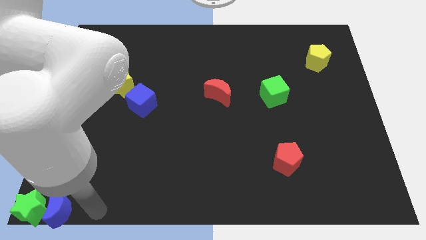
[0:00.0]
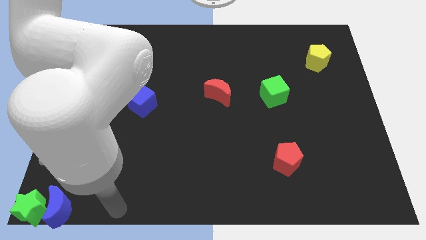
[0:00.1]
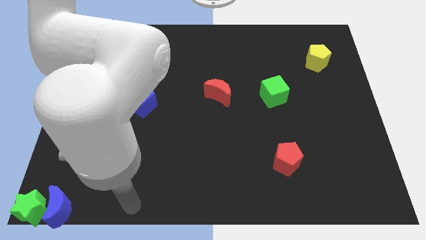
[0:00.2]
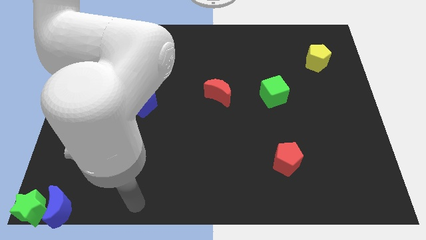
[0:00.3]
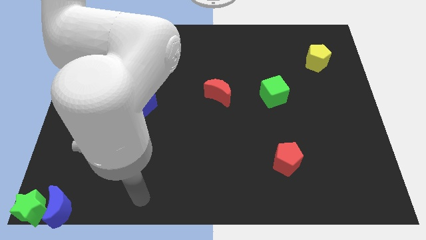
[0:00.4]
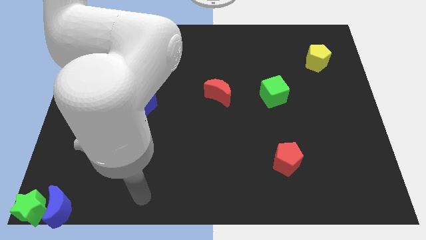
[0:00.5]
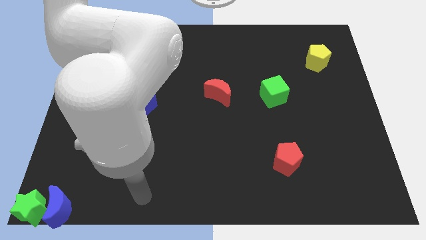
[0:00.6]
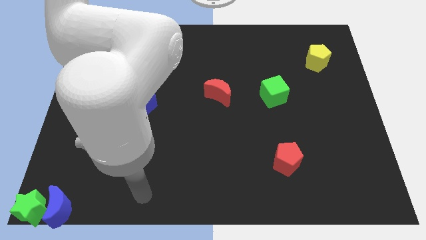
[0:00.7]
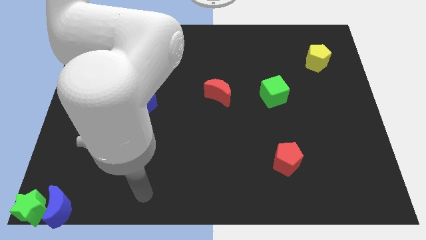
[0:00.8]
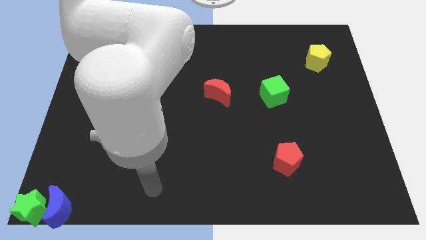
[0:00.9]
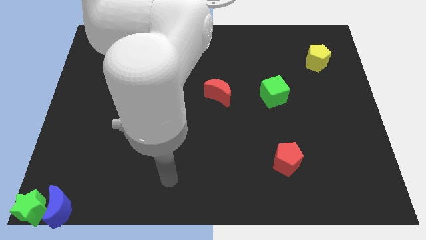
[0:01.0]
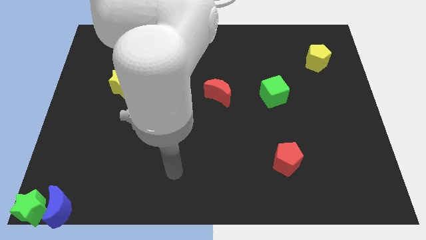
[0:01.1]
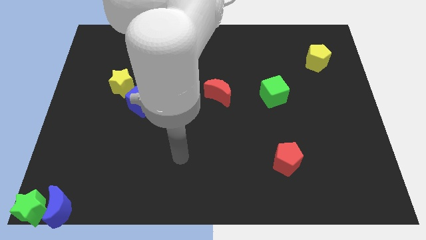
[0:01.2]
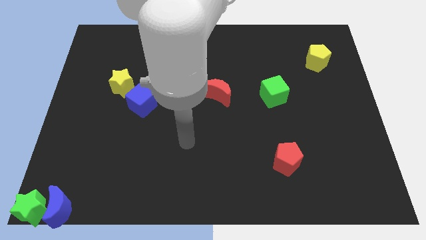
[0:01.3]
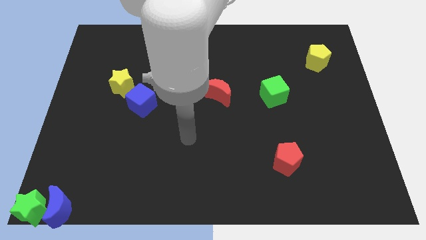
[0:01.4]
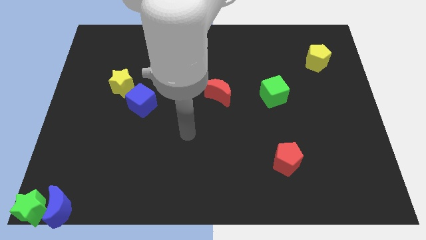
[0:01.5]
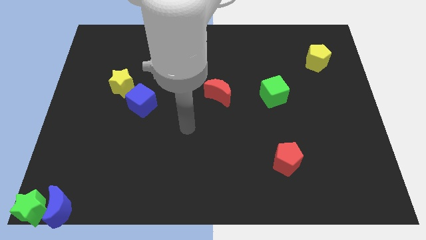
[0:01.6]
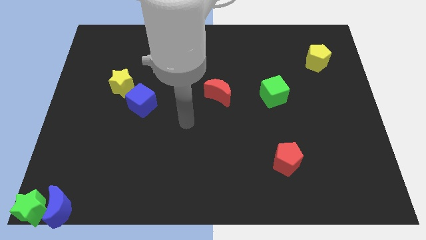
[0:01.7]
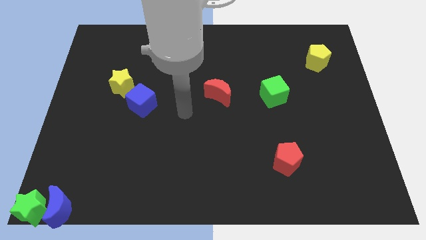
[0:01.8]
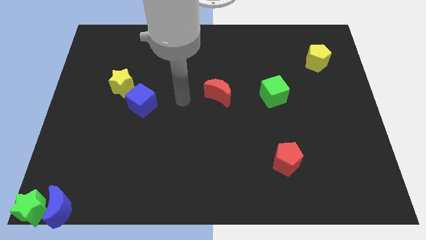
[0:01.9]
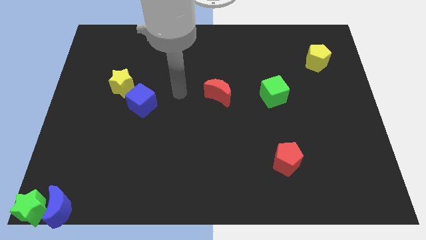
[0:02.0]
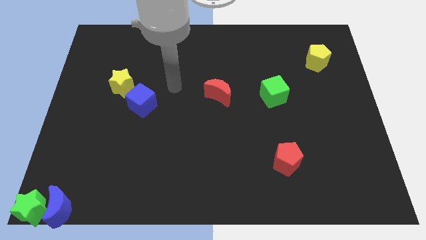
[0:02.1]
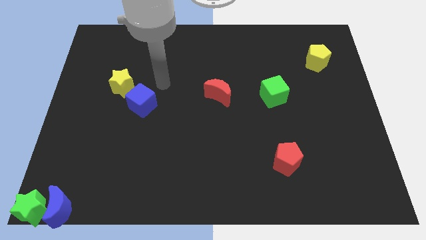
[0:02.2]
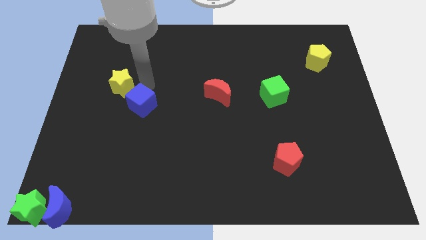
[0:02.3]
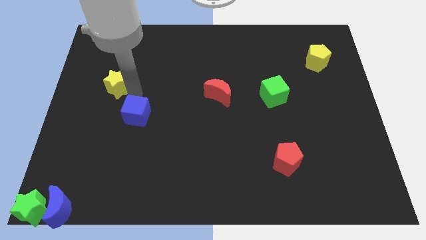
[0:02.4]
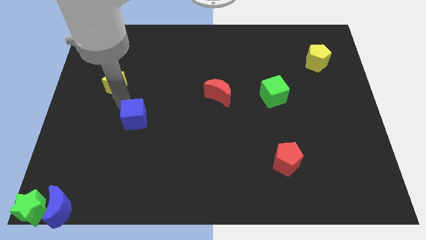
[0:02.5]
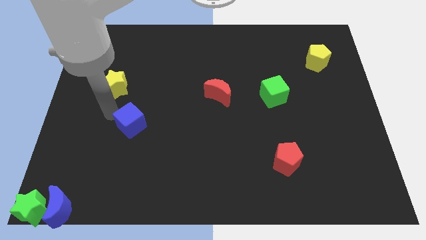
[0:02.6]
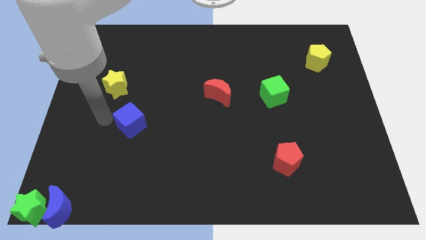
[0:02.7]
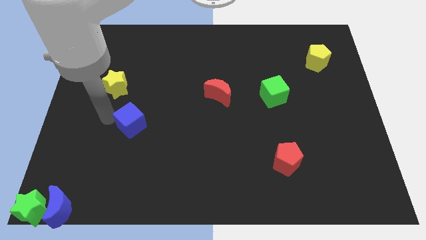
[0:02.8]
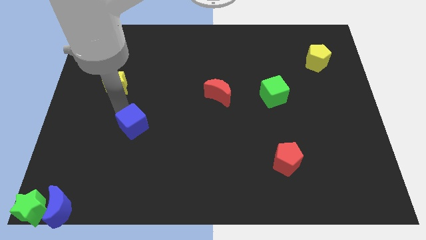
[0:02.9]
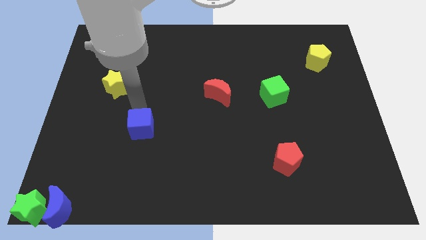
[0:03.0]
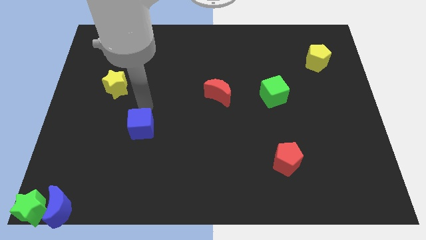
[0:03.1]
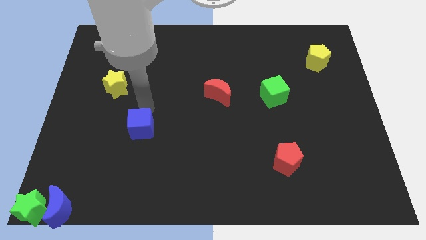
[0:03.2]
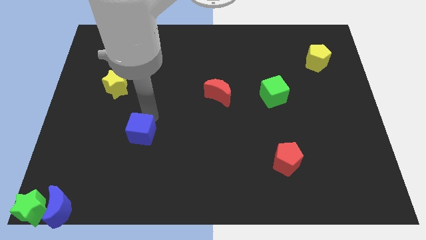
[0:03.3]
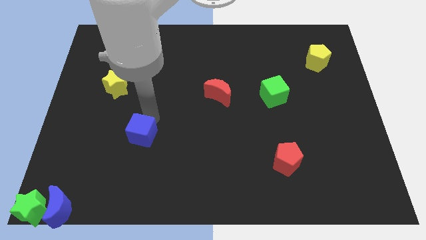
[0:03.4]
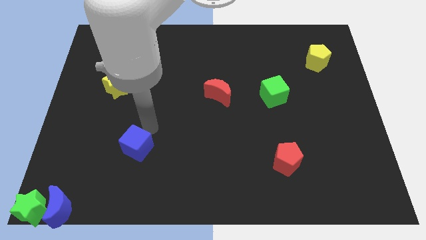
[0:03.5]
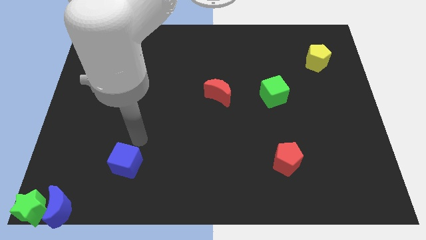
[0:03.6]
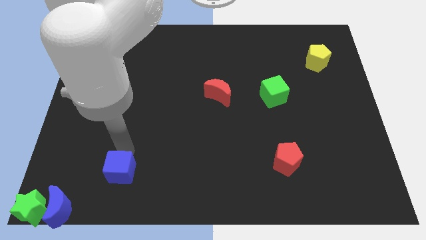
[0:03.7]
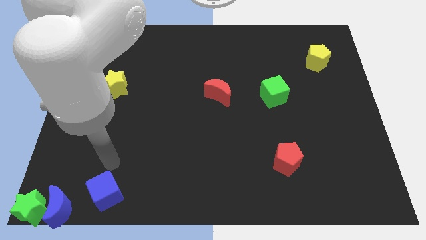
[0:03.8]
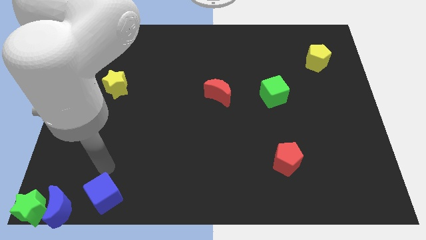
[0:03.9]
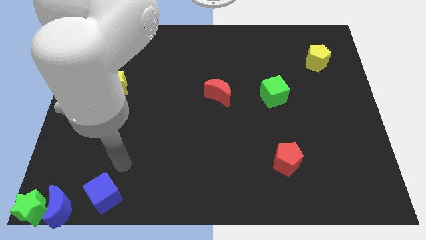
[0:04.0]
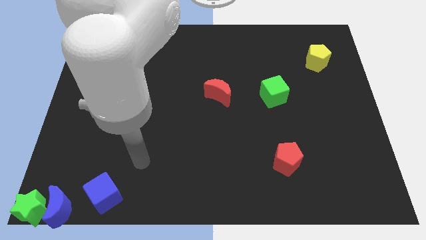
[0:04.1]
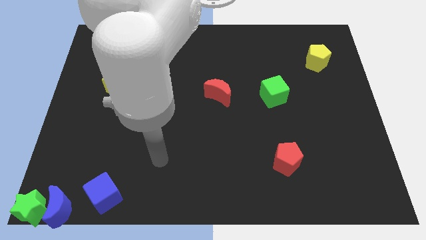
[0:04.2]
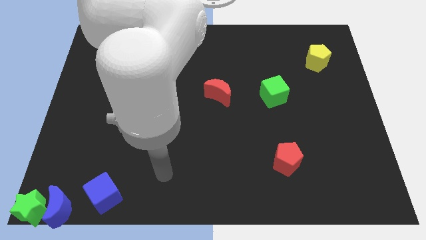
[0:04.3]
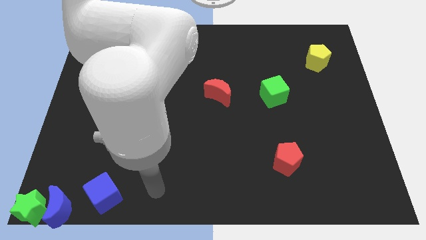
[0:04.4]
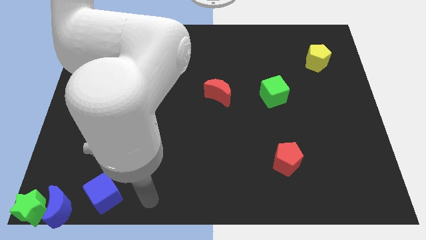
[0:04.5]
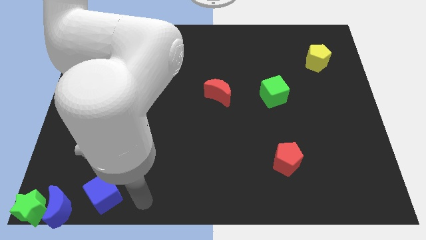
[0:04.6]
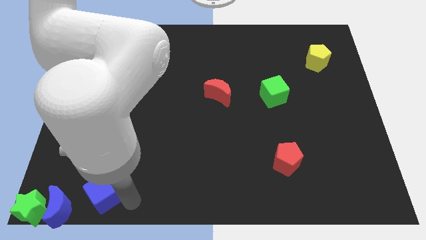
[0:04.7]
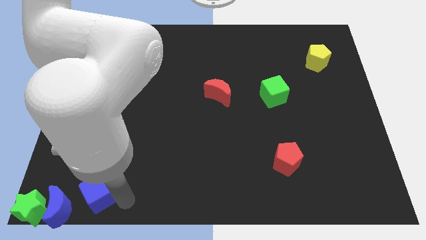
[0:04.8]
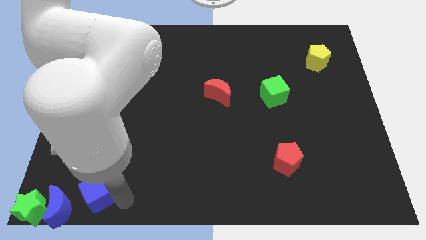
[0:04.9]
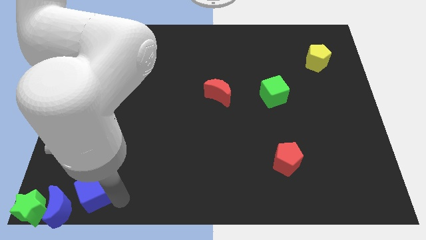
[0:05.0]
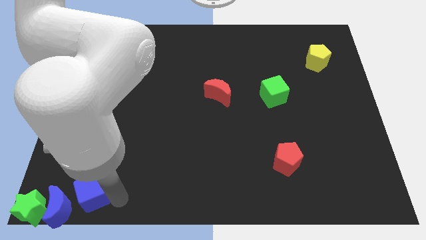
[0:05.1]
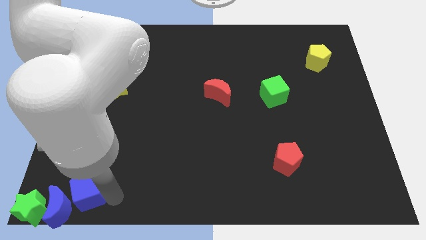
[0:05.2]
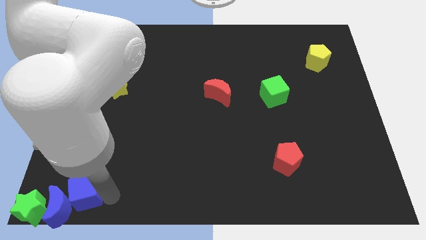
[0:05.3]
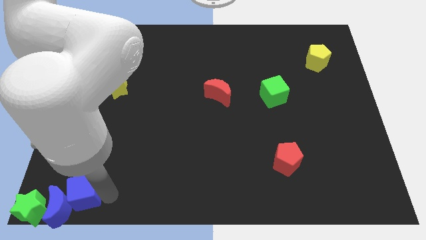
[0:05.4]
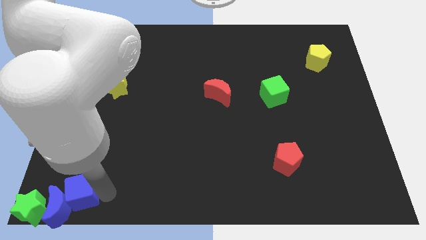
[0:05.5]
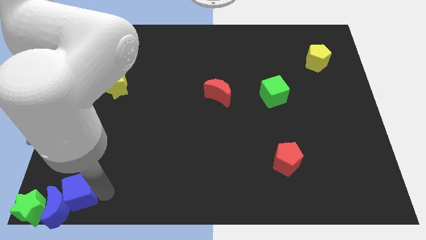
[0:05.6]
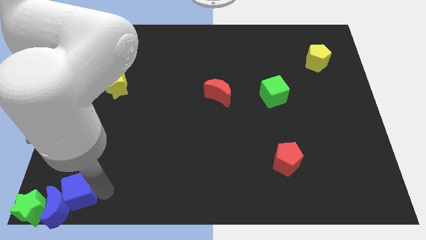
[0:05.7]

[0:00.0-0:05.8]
drag the blue cube into the right side of the blue moon

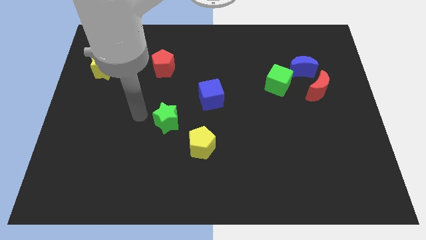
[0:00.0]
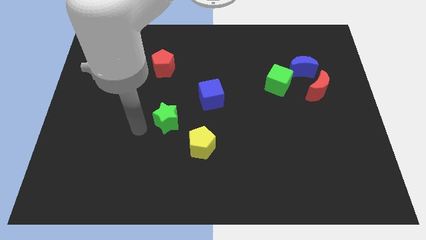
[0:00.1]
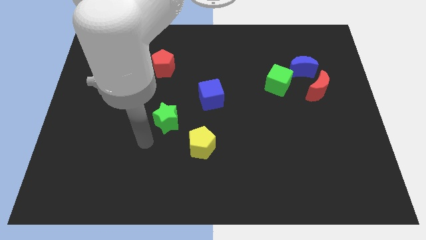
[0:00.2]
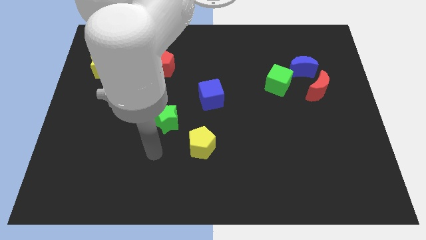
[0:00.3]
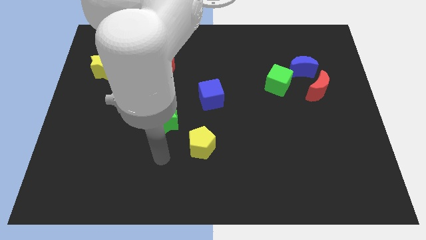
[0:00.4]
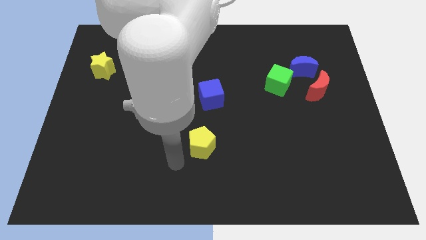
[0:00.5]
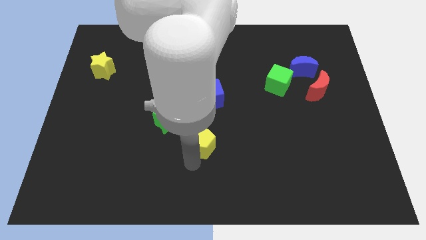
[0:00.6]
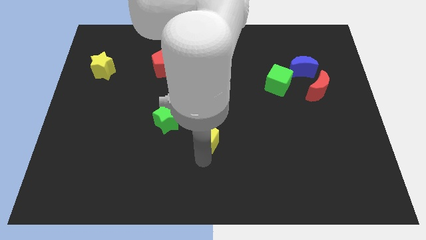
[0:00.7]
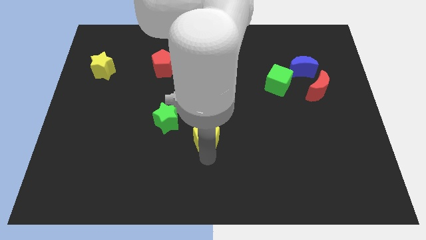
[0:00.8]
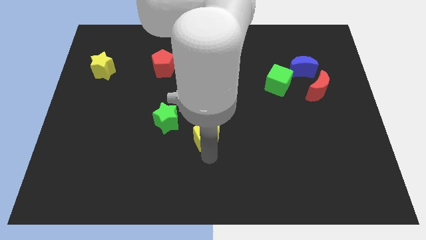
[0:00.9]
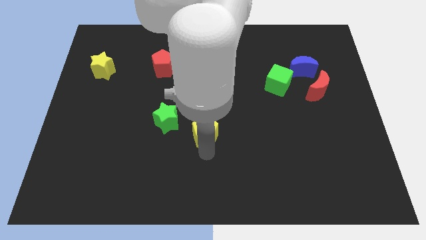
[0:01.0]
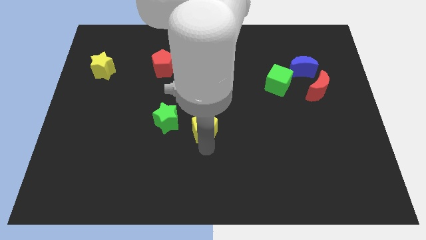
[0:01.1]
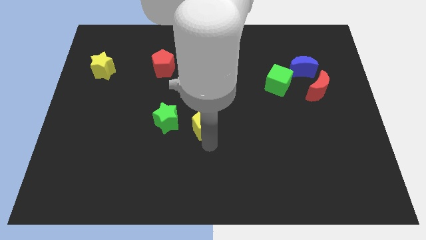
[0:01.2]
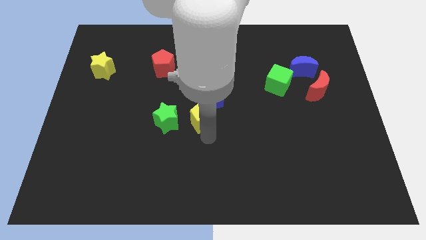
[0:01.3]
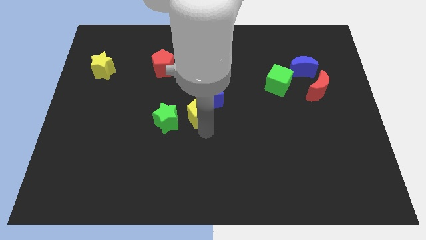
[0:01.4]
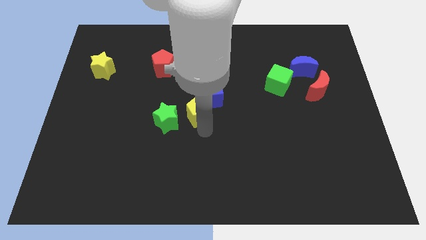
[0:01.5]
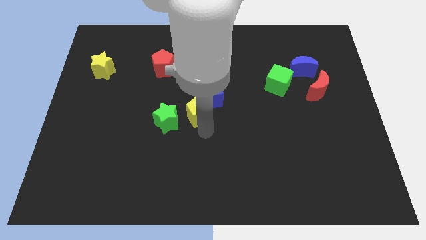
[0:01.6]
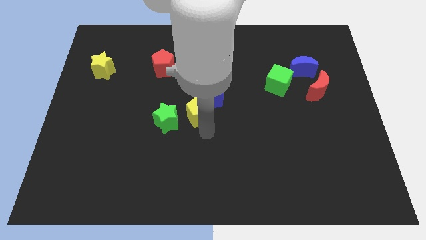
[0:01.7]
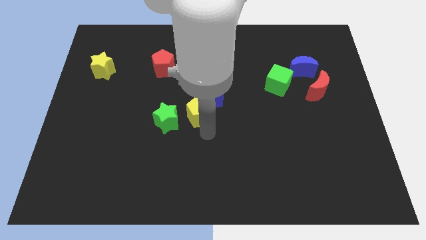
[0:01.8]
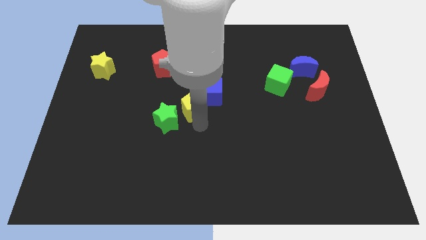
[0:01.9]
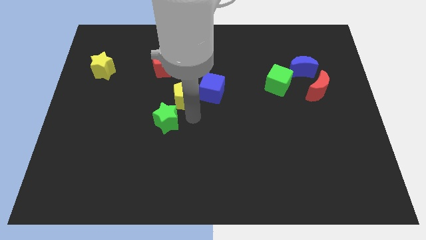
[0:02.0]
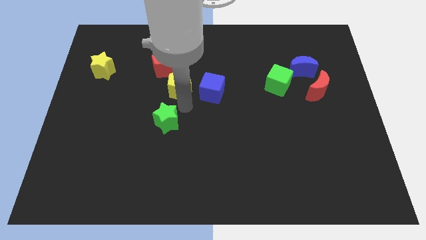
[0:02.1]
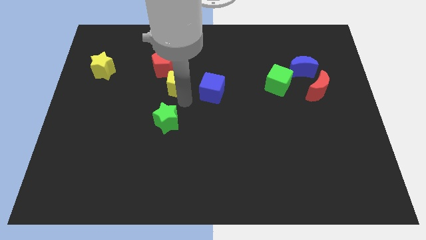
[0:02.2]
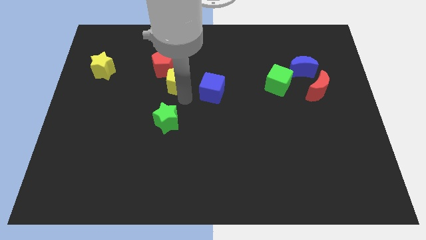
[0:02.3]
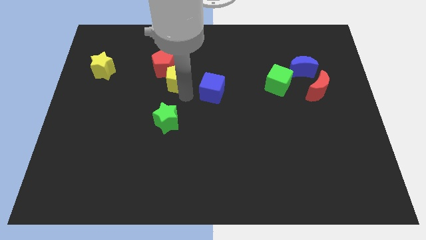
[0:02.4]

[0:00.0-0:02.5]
place the yellow pentagon into the red pentagon

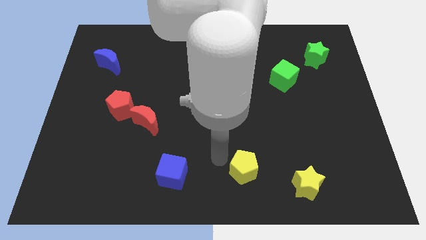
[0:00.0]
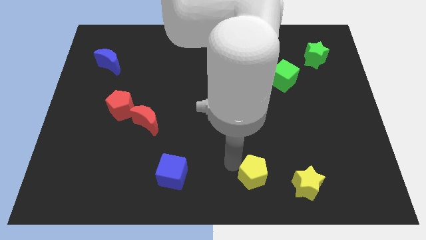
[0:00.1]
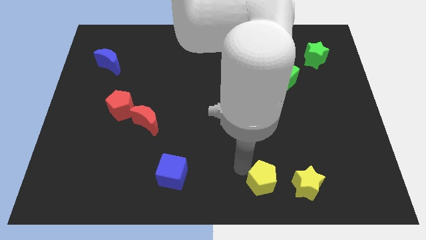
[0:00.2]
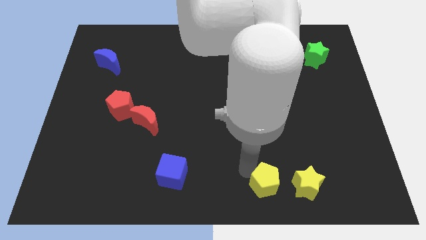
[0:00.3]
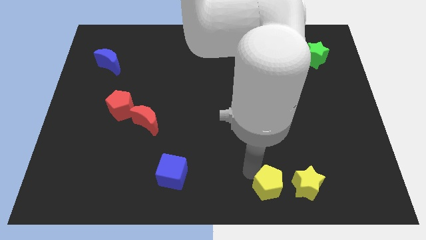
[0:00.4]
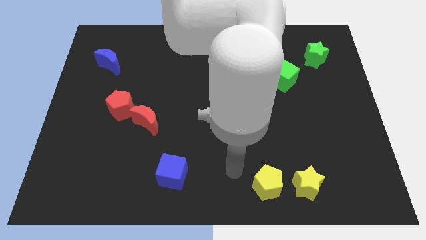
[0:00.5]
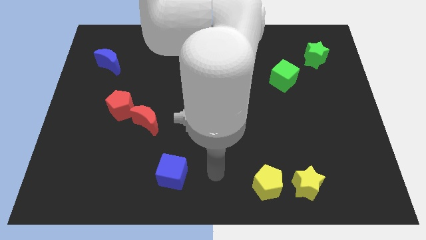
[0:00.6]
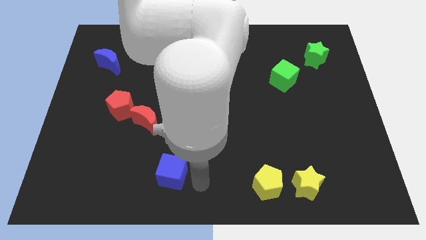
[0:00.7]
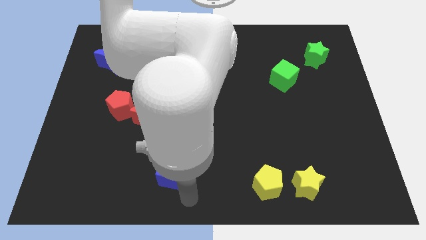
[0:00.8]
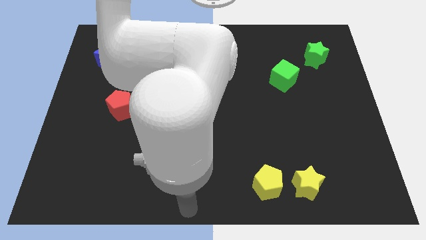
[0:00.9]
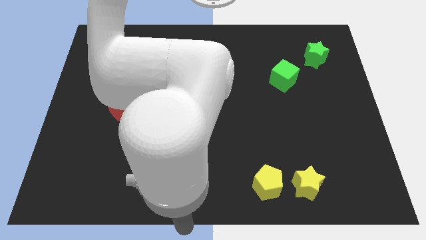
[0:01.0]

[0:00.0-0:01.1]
slide yellow pentagon close to yellow star
